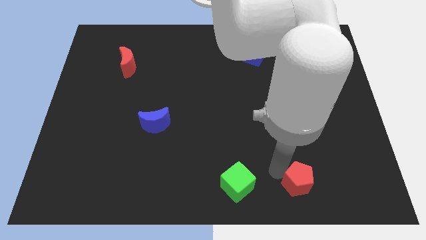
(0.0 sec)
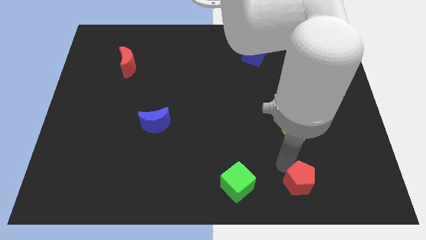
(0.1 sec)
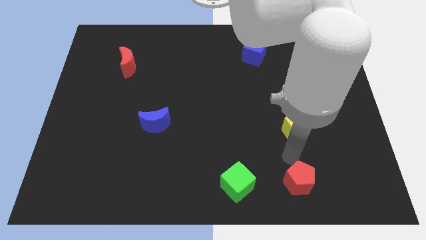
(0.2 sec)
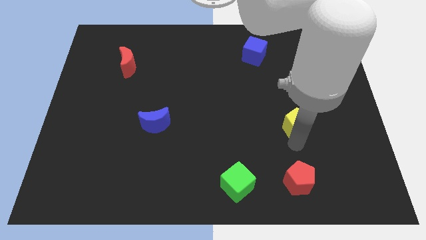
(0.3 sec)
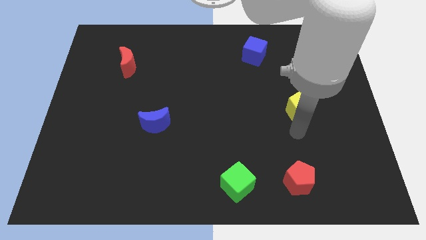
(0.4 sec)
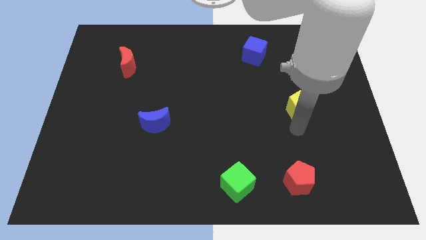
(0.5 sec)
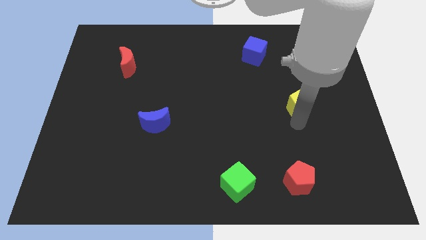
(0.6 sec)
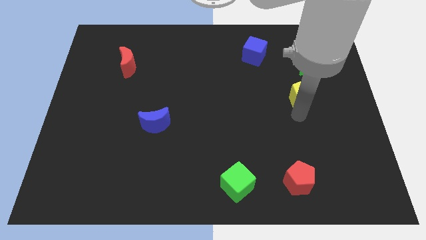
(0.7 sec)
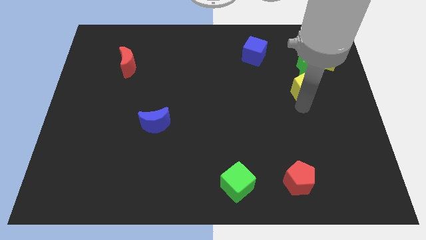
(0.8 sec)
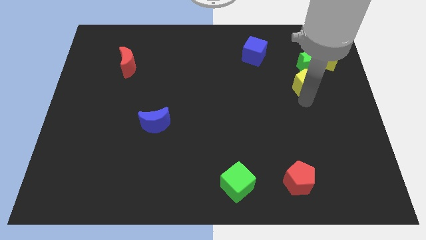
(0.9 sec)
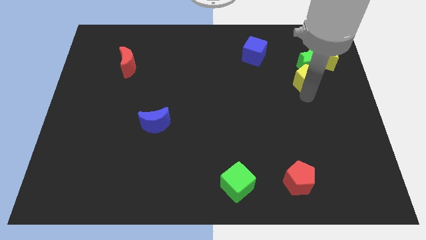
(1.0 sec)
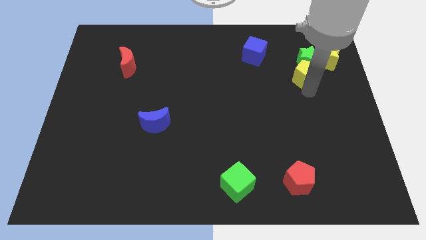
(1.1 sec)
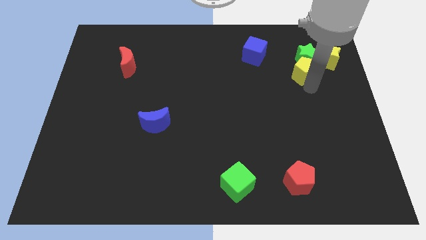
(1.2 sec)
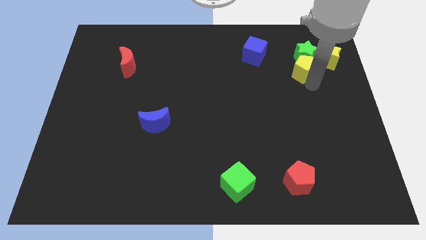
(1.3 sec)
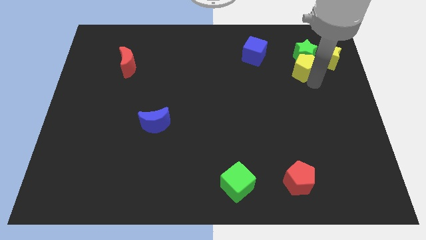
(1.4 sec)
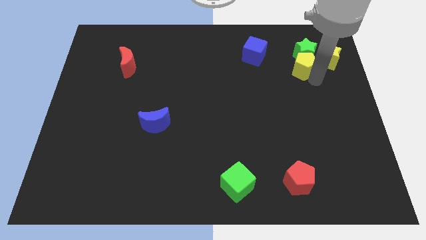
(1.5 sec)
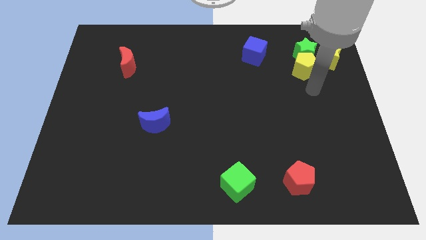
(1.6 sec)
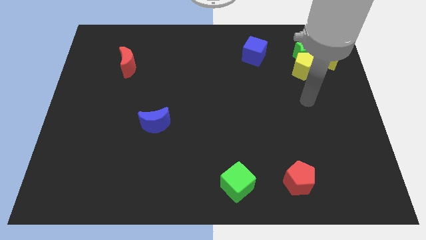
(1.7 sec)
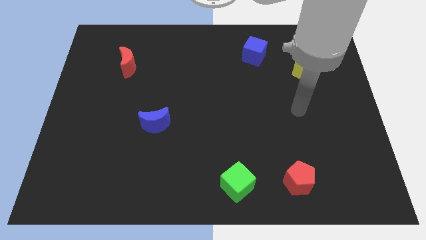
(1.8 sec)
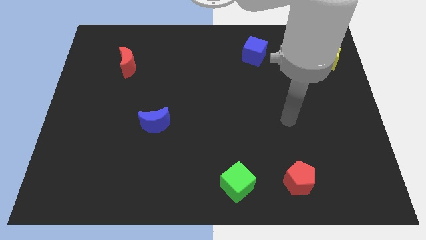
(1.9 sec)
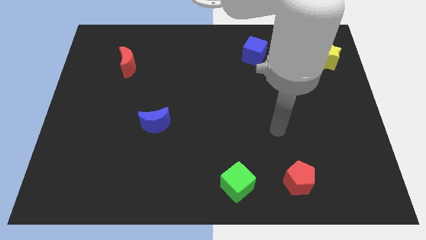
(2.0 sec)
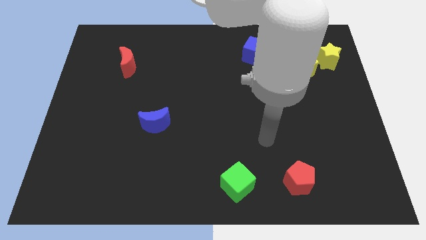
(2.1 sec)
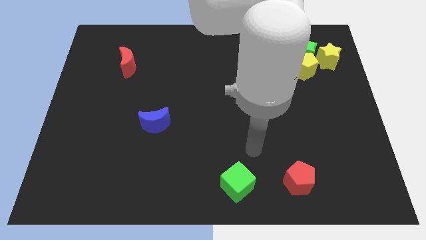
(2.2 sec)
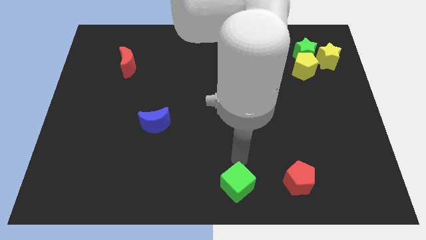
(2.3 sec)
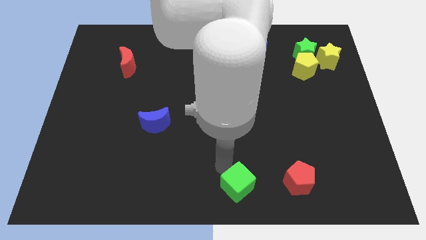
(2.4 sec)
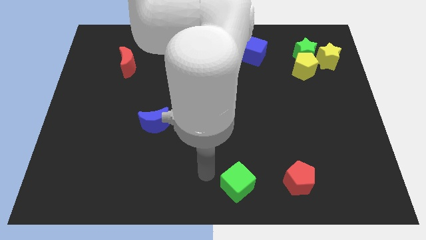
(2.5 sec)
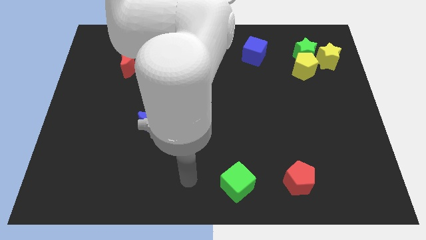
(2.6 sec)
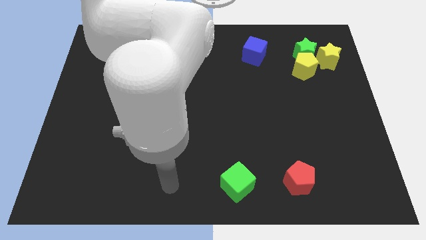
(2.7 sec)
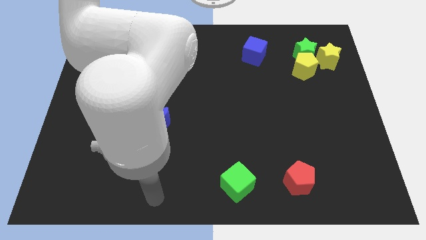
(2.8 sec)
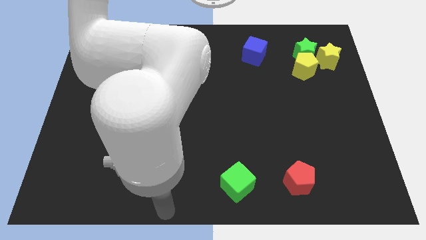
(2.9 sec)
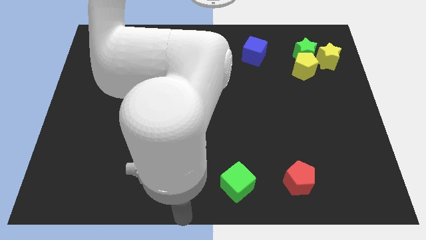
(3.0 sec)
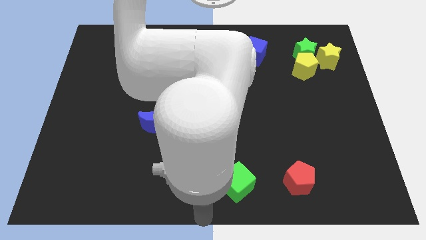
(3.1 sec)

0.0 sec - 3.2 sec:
place the yellow pentagon at the bottom of green star

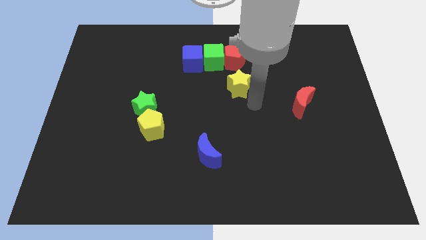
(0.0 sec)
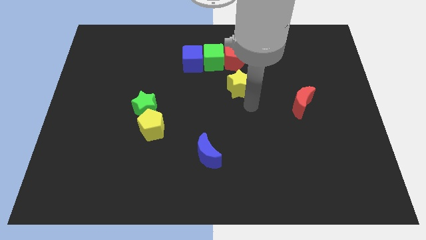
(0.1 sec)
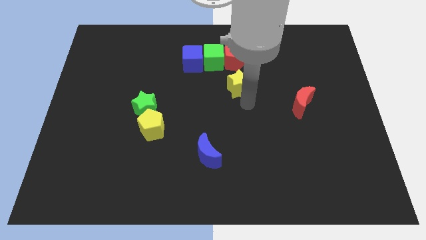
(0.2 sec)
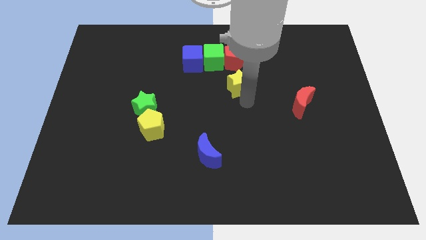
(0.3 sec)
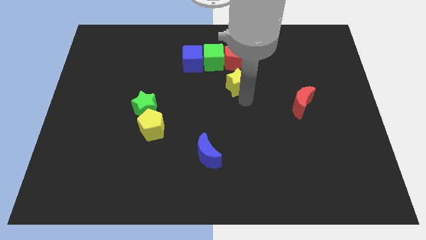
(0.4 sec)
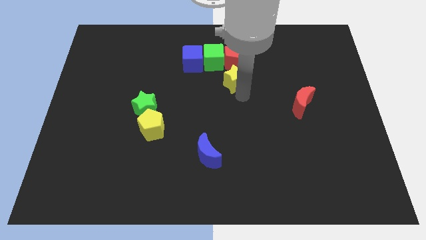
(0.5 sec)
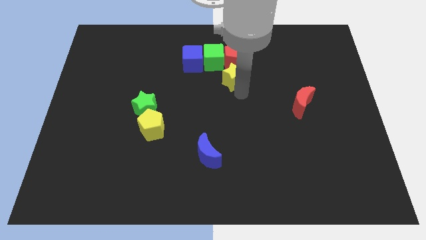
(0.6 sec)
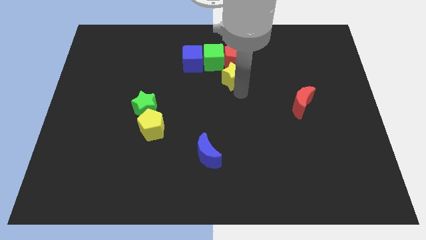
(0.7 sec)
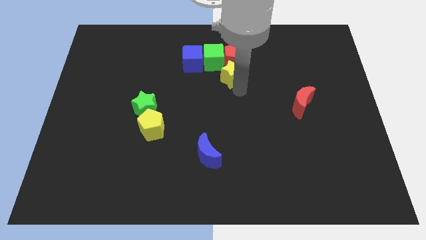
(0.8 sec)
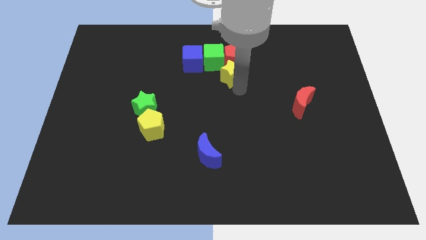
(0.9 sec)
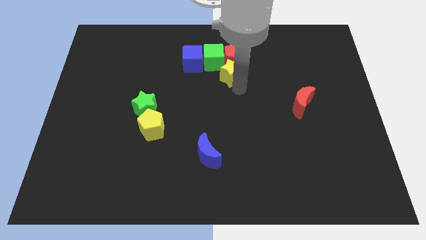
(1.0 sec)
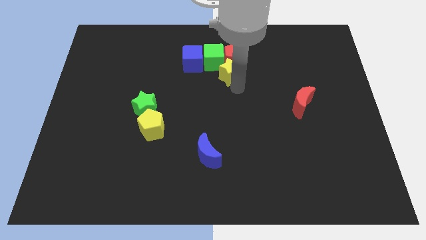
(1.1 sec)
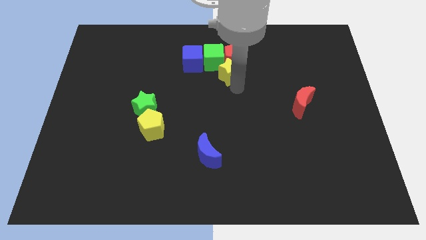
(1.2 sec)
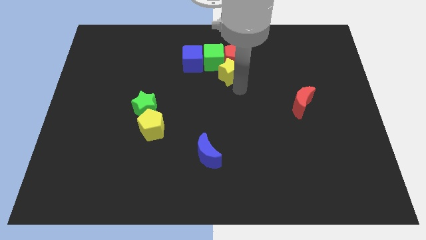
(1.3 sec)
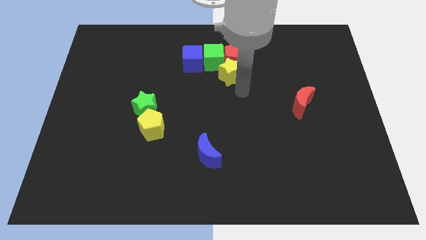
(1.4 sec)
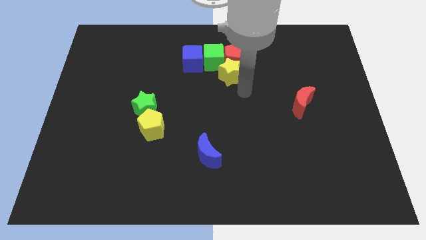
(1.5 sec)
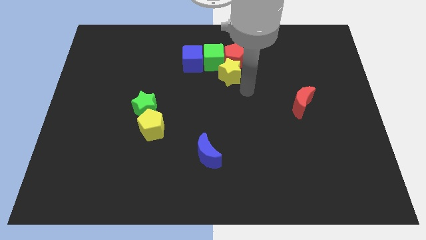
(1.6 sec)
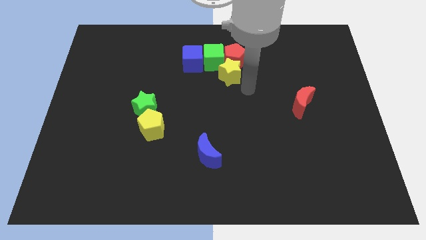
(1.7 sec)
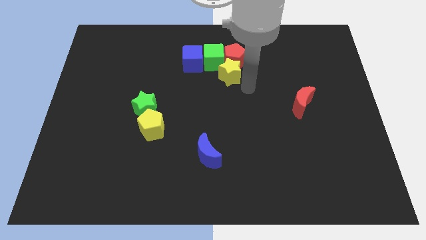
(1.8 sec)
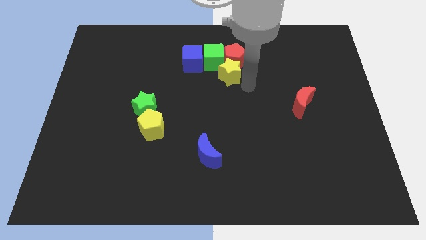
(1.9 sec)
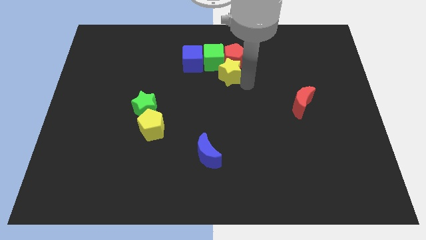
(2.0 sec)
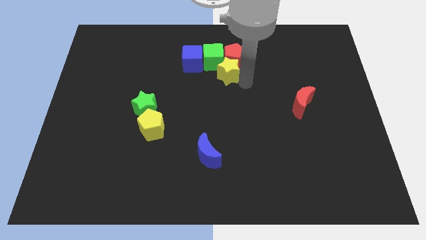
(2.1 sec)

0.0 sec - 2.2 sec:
place the yellow star to the bottom of the red pentagon

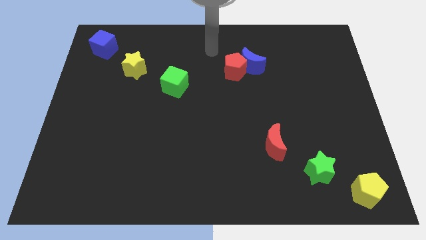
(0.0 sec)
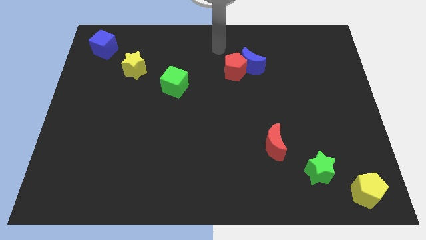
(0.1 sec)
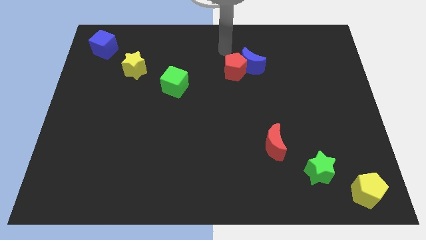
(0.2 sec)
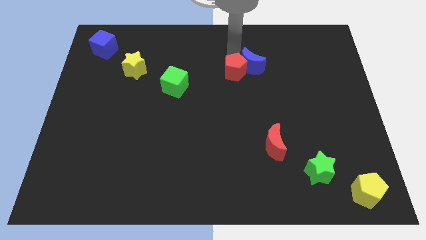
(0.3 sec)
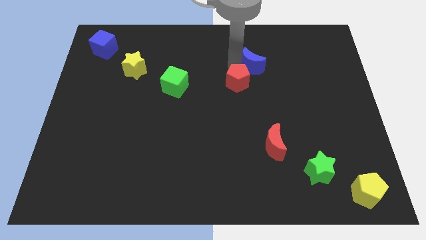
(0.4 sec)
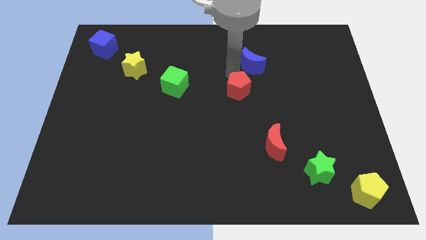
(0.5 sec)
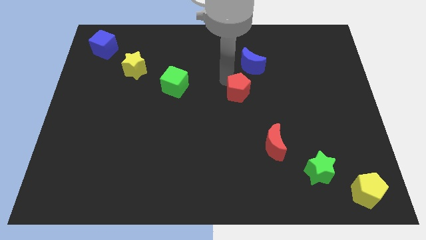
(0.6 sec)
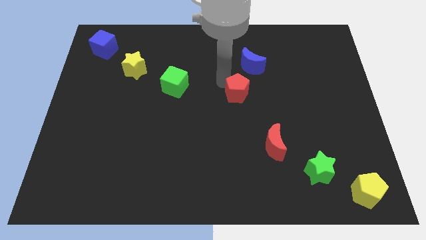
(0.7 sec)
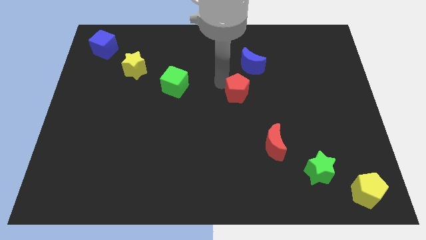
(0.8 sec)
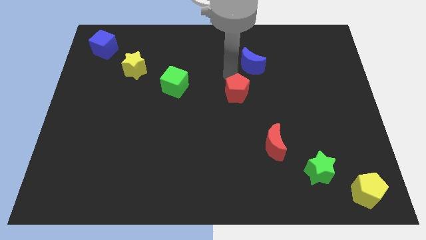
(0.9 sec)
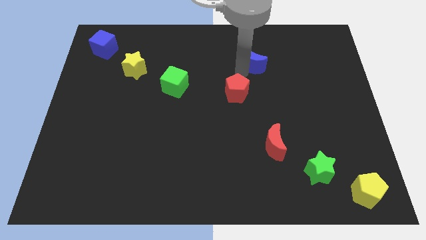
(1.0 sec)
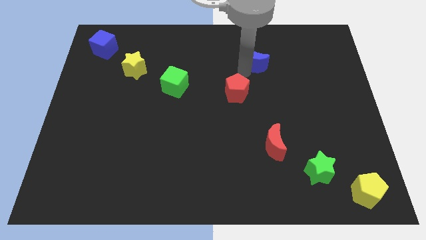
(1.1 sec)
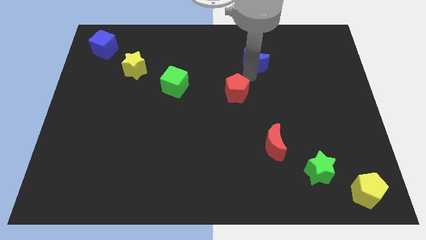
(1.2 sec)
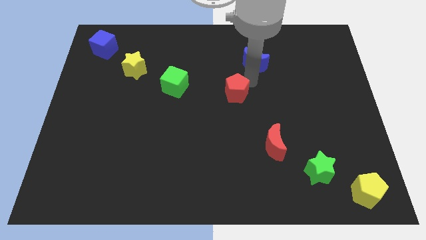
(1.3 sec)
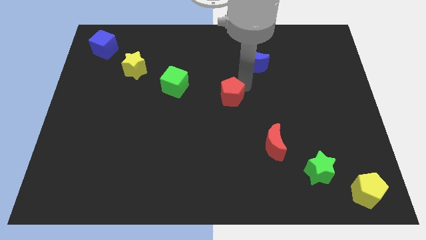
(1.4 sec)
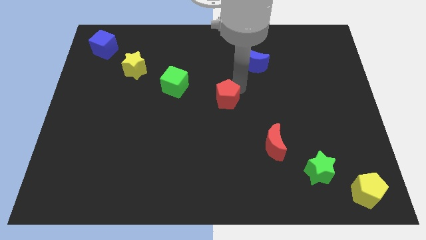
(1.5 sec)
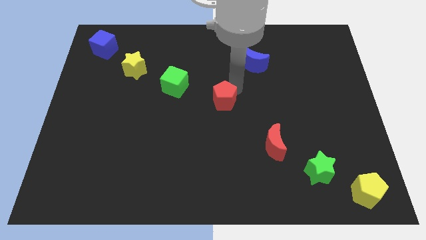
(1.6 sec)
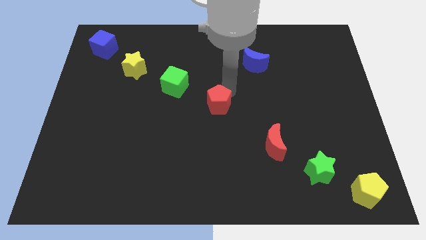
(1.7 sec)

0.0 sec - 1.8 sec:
separate the red pentagon and the blue crescent

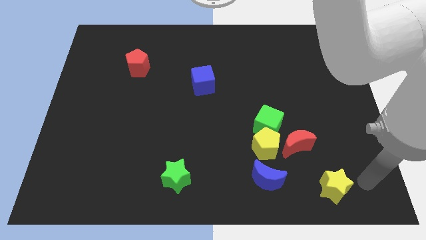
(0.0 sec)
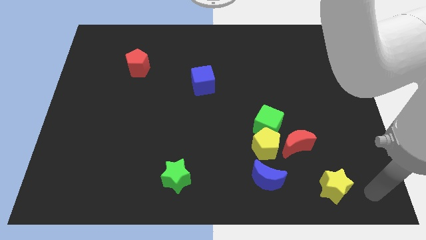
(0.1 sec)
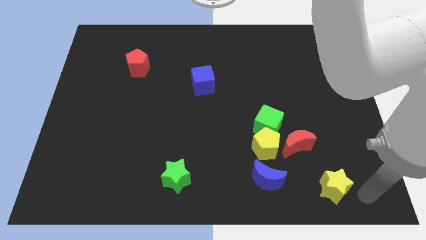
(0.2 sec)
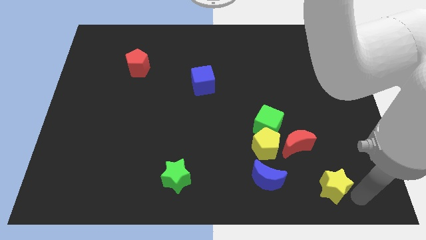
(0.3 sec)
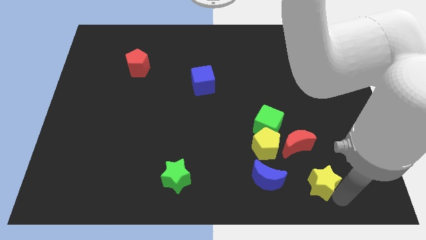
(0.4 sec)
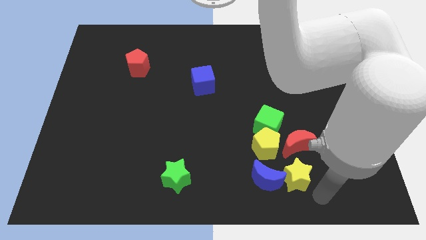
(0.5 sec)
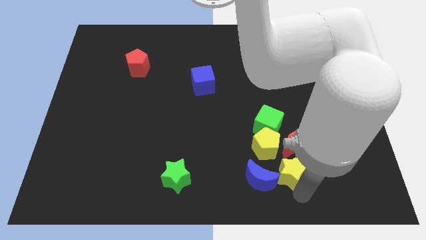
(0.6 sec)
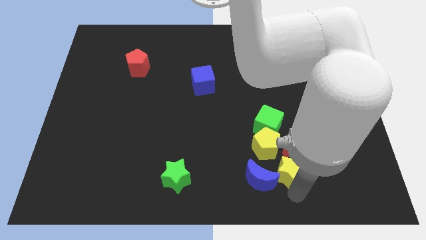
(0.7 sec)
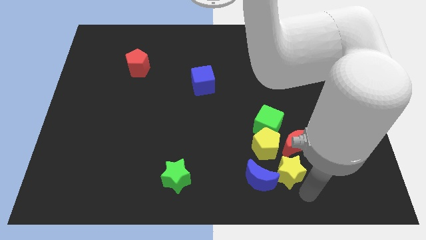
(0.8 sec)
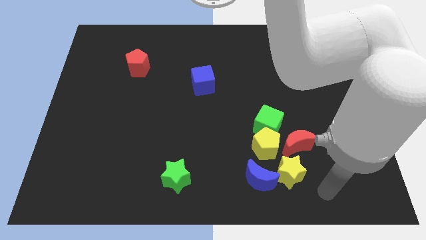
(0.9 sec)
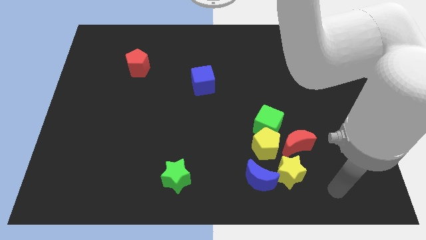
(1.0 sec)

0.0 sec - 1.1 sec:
push the yellow star into the blue crescent

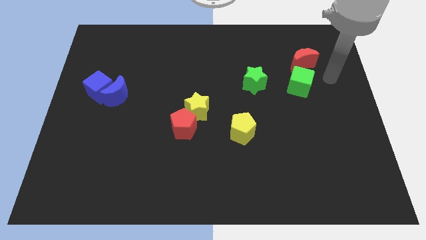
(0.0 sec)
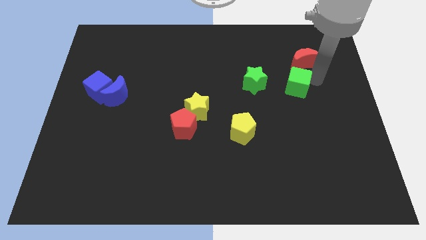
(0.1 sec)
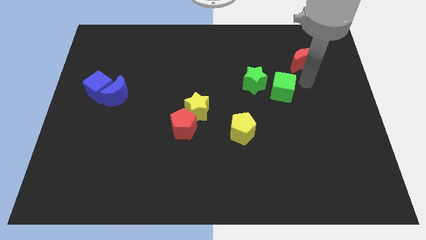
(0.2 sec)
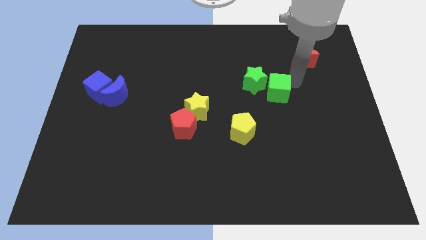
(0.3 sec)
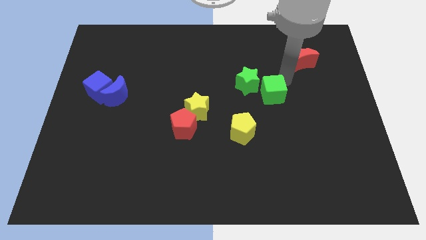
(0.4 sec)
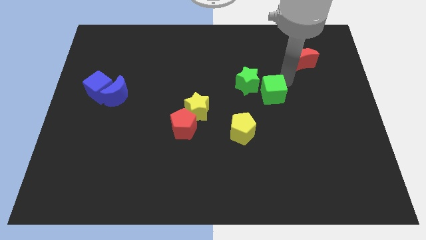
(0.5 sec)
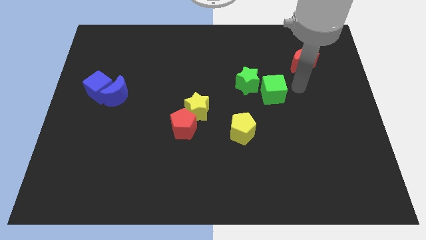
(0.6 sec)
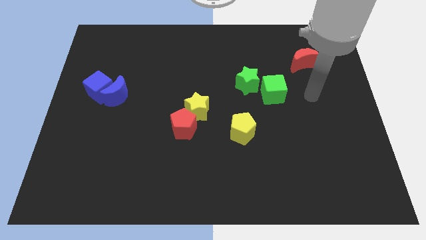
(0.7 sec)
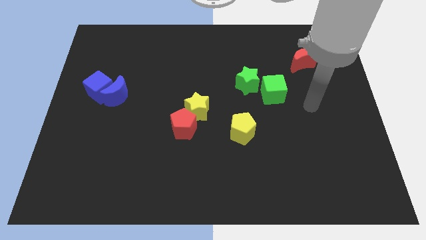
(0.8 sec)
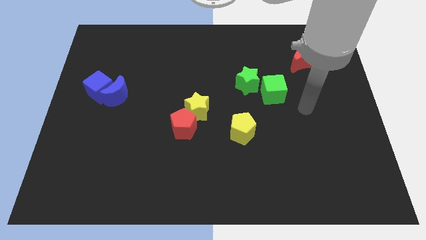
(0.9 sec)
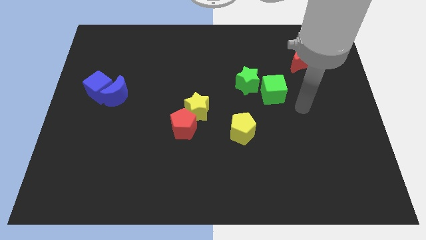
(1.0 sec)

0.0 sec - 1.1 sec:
push the green cube to the right of the green star
